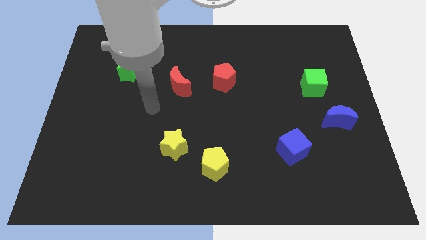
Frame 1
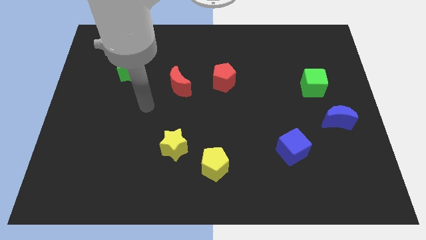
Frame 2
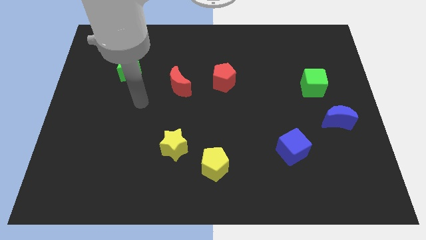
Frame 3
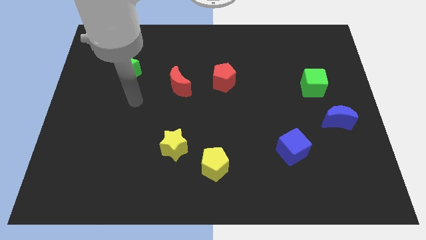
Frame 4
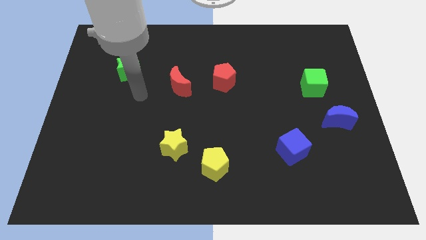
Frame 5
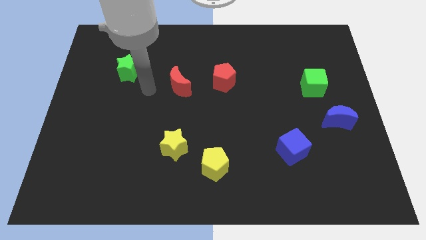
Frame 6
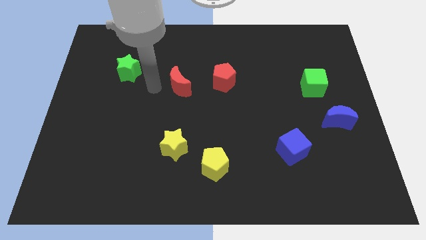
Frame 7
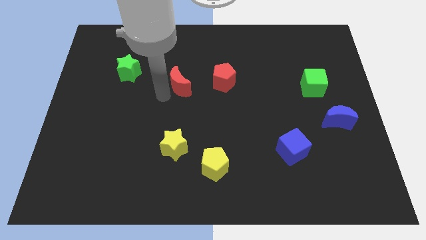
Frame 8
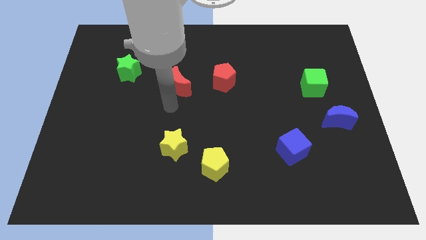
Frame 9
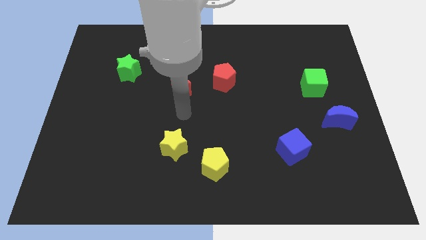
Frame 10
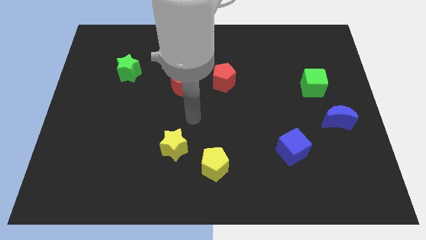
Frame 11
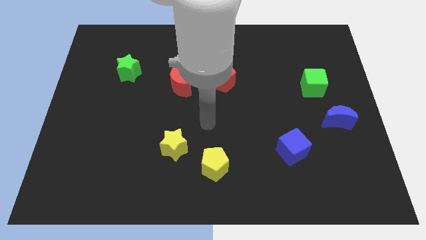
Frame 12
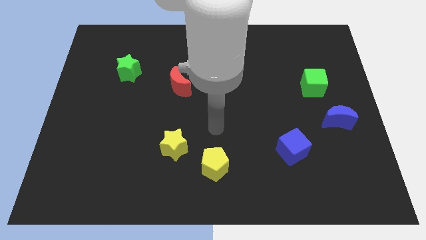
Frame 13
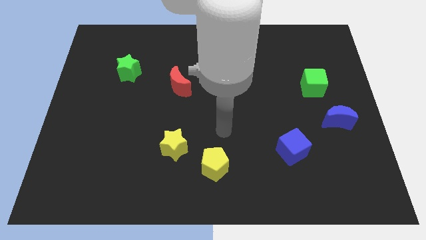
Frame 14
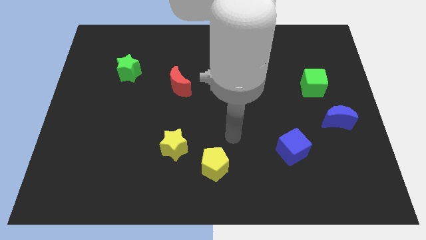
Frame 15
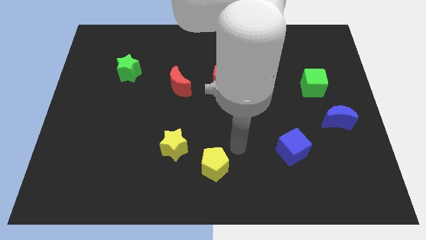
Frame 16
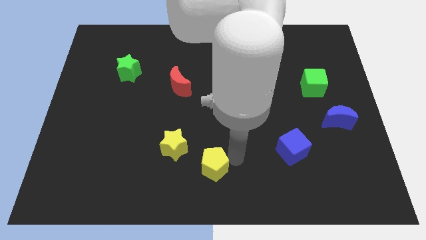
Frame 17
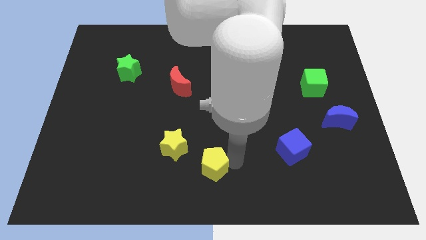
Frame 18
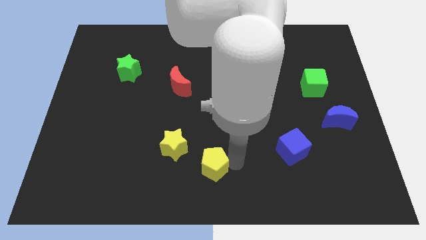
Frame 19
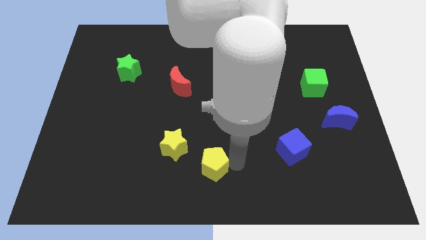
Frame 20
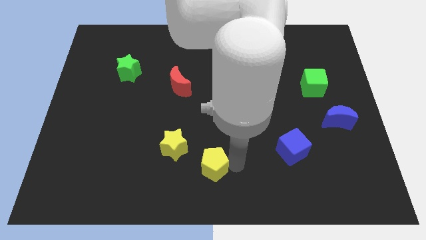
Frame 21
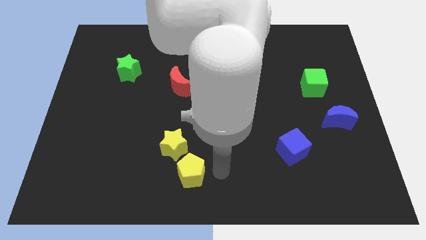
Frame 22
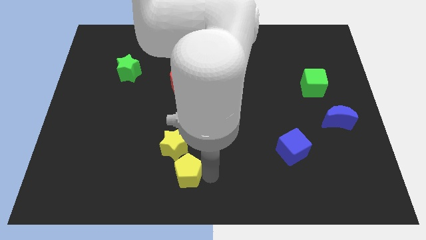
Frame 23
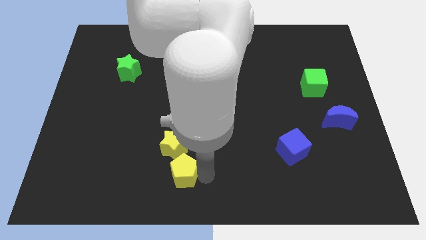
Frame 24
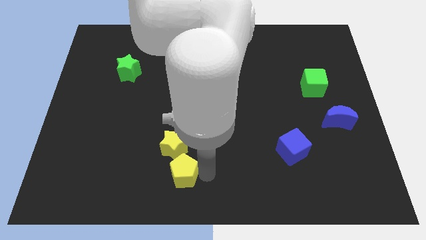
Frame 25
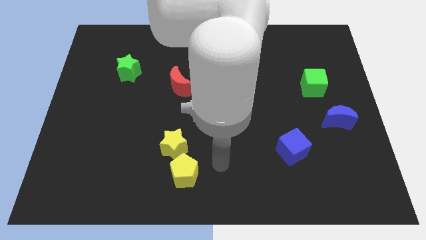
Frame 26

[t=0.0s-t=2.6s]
move the yellow pentagon to the bottom of the yellow star

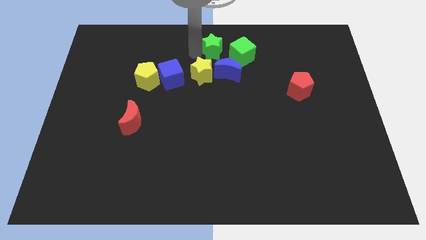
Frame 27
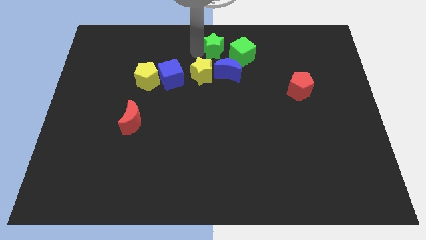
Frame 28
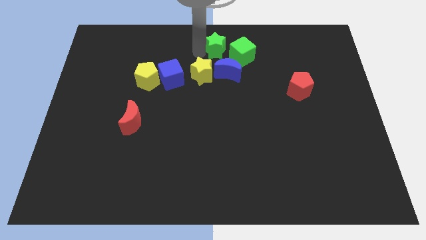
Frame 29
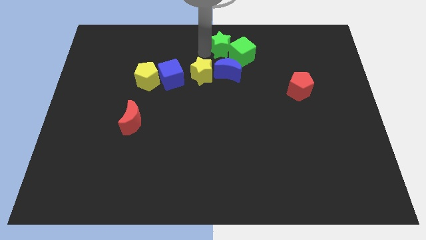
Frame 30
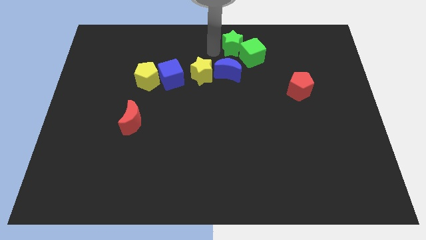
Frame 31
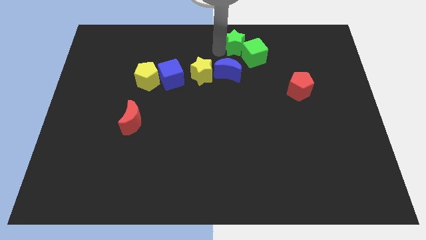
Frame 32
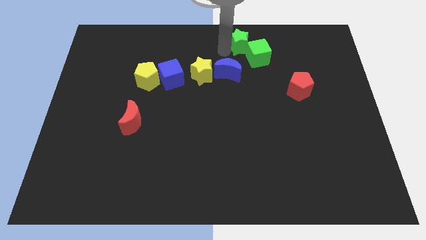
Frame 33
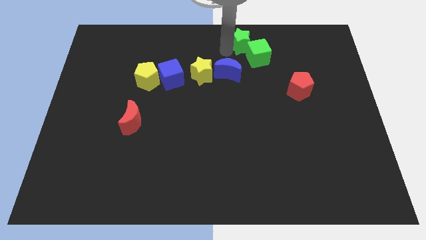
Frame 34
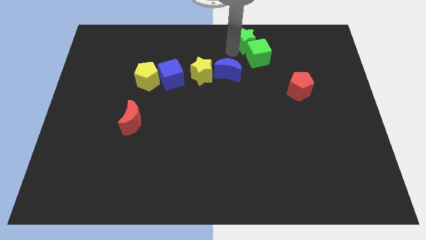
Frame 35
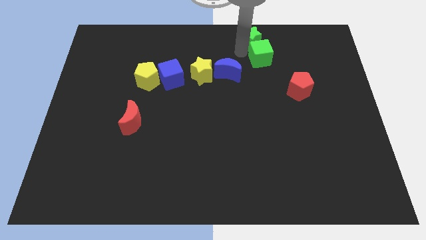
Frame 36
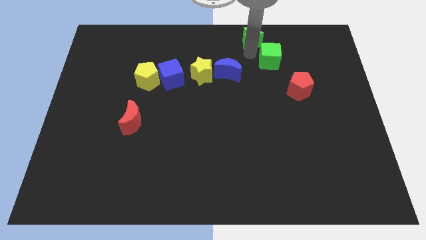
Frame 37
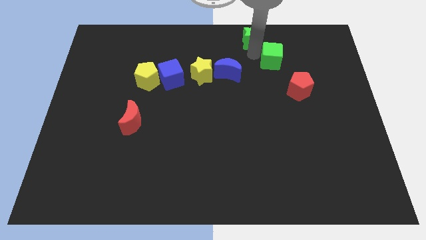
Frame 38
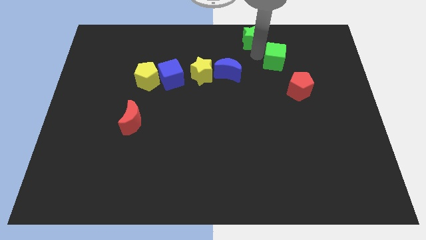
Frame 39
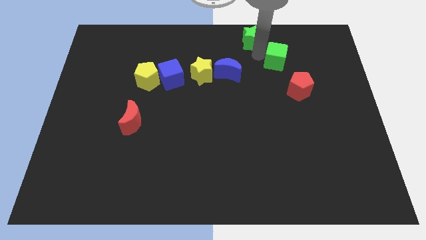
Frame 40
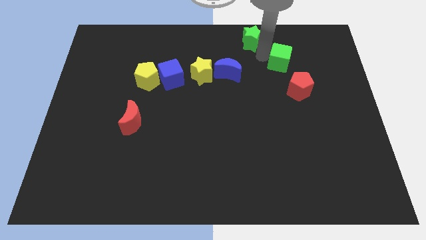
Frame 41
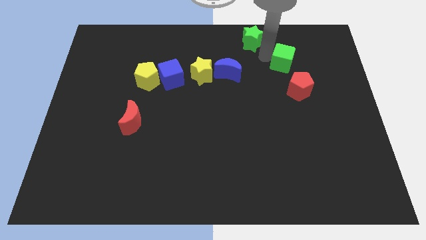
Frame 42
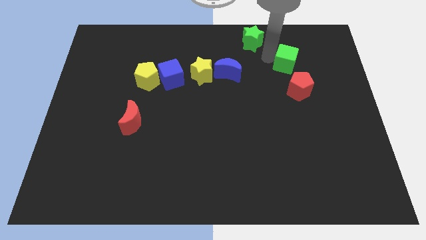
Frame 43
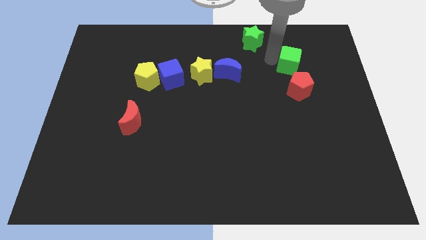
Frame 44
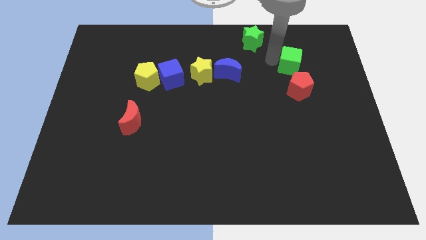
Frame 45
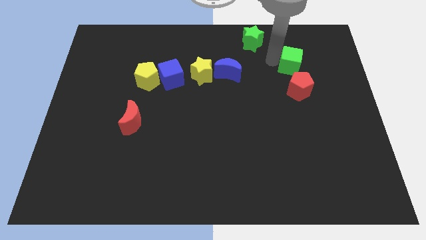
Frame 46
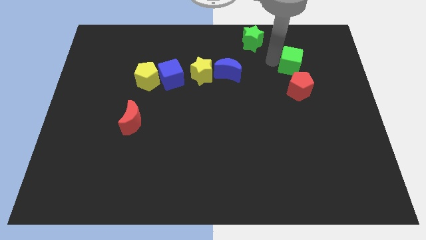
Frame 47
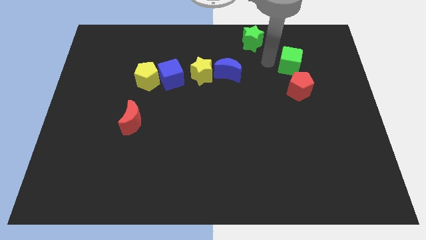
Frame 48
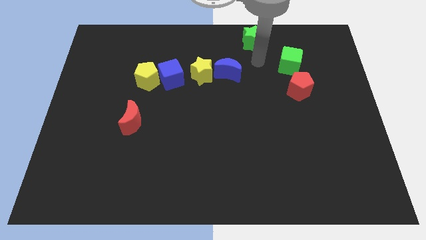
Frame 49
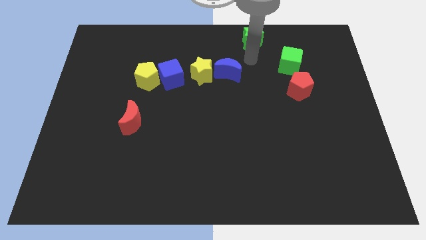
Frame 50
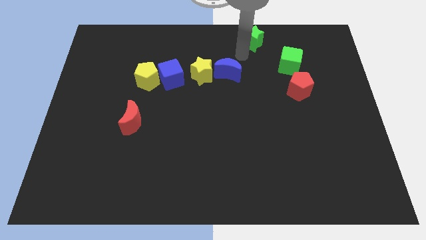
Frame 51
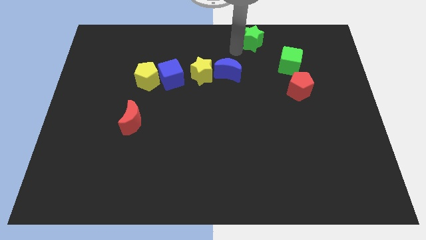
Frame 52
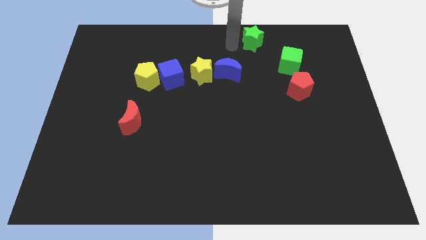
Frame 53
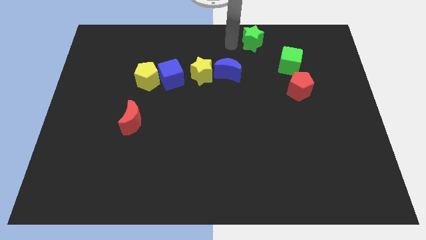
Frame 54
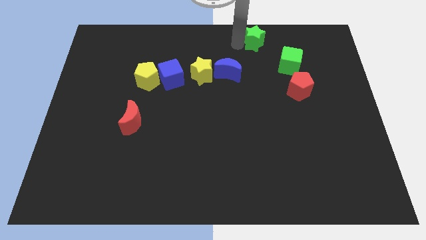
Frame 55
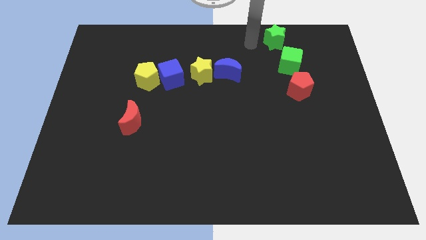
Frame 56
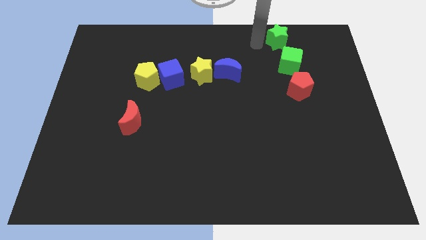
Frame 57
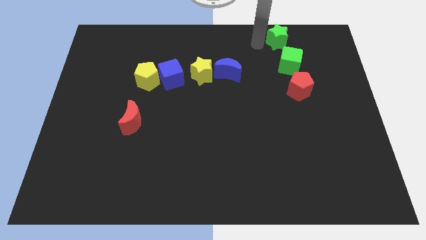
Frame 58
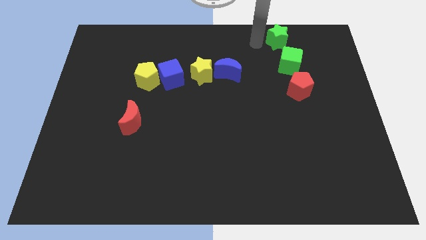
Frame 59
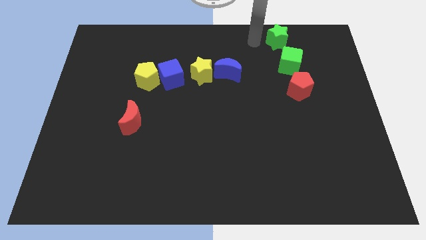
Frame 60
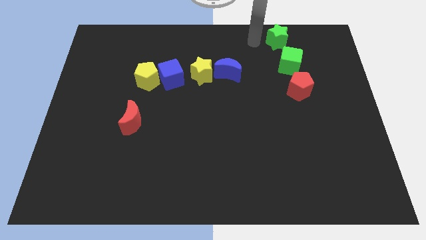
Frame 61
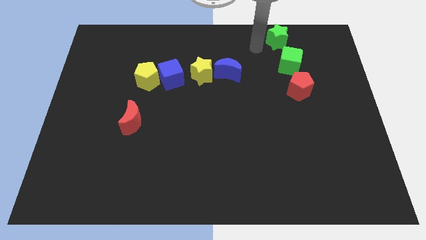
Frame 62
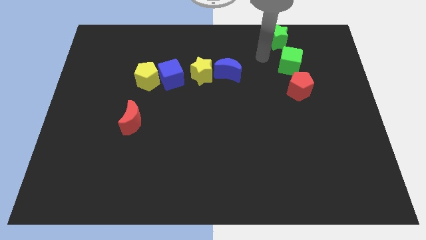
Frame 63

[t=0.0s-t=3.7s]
place green star and green cube vertically above red pentagon

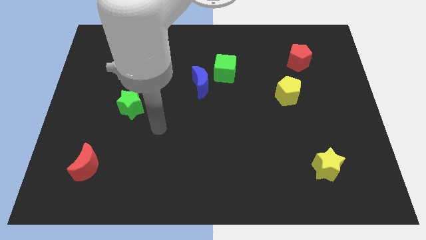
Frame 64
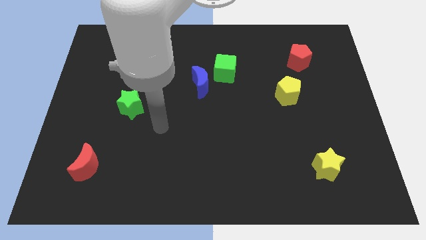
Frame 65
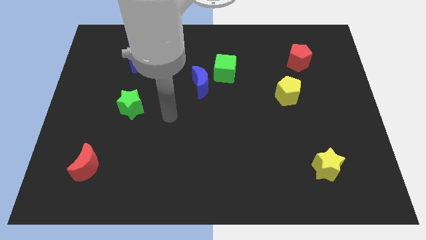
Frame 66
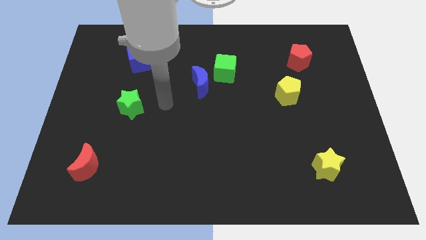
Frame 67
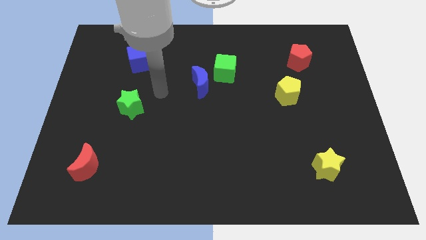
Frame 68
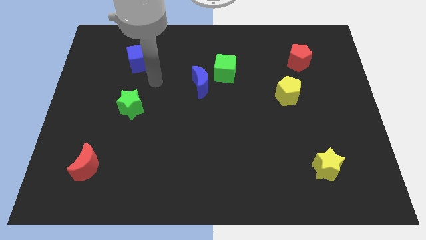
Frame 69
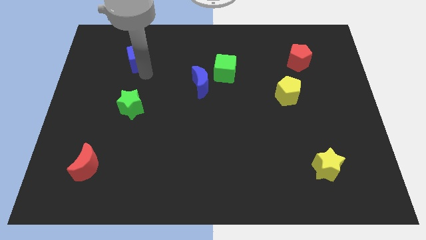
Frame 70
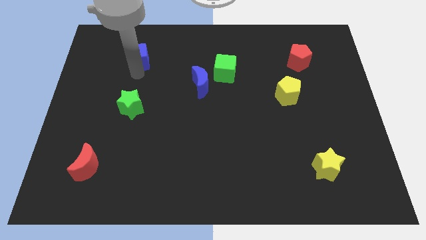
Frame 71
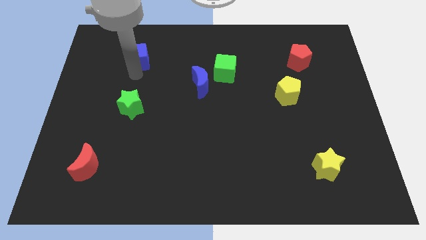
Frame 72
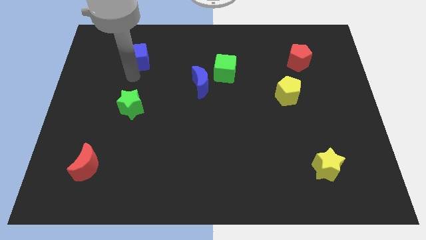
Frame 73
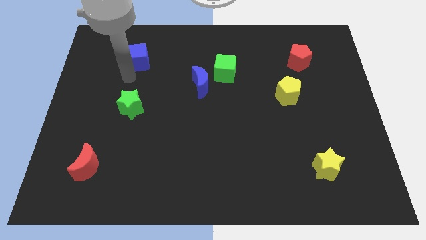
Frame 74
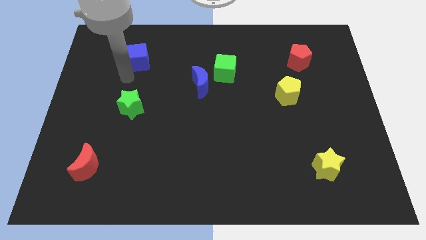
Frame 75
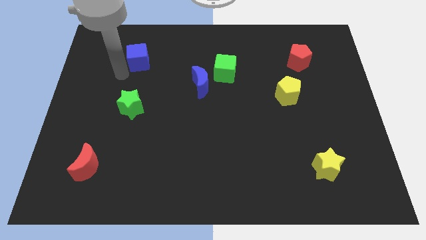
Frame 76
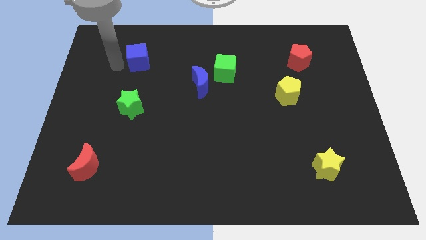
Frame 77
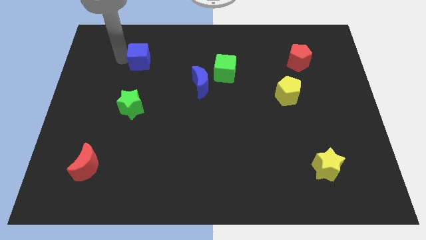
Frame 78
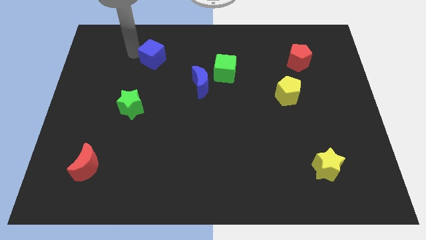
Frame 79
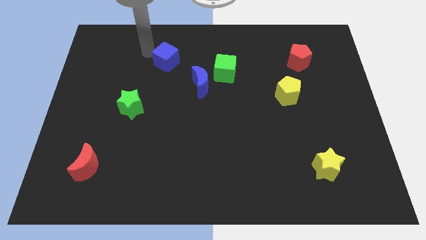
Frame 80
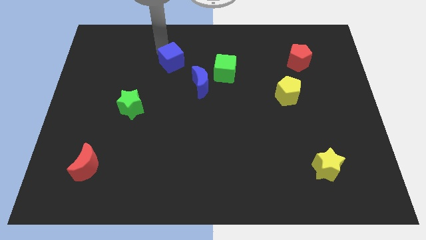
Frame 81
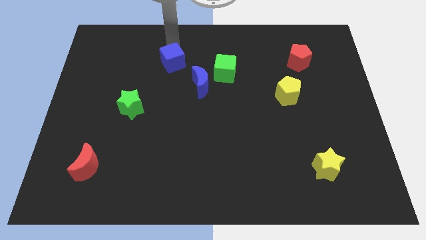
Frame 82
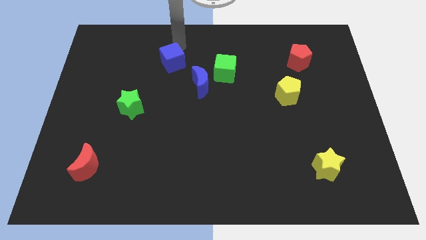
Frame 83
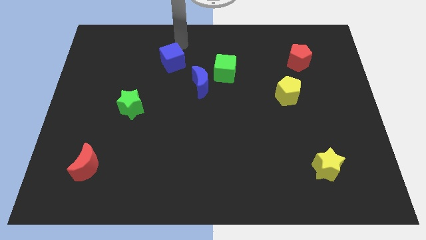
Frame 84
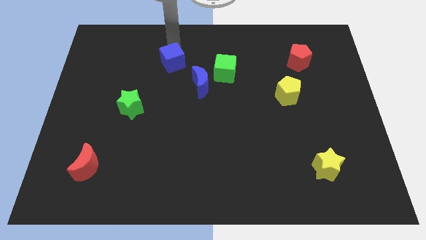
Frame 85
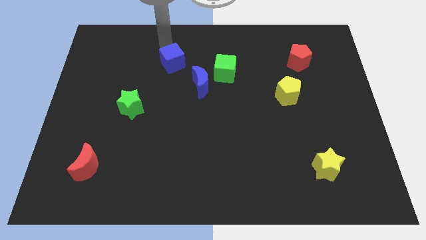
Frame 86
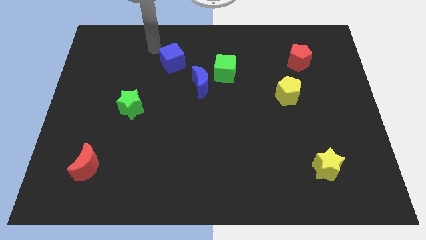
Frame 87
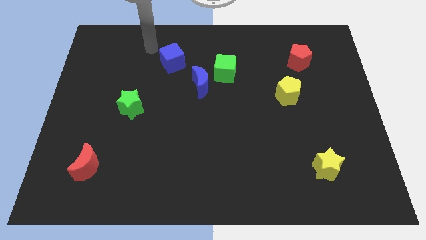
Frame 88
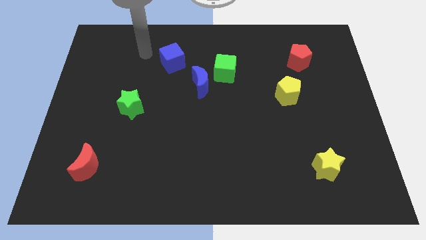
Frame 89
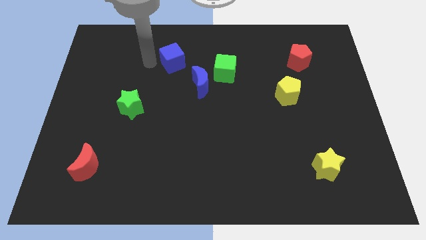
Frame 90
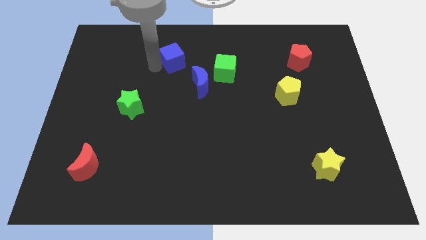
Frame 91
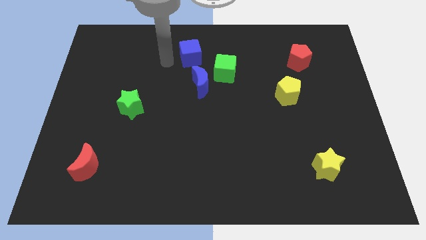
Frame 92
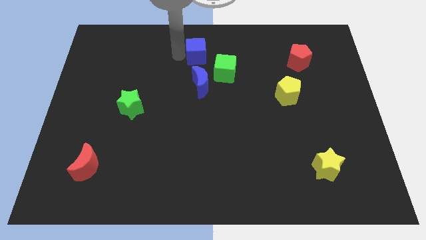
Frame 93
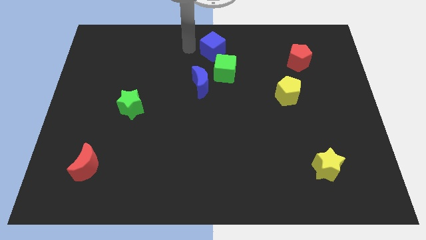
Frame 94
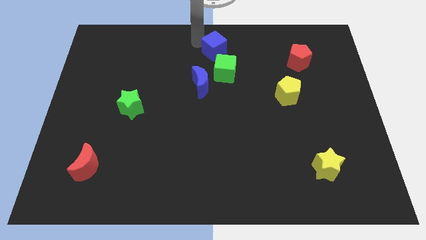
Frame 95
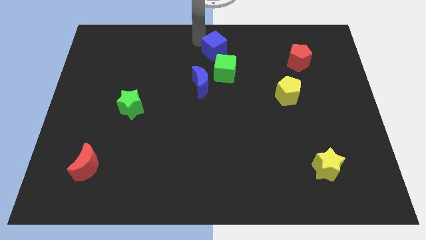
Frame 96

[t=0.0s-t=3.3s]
move the blue cube to the top left side of the green cube
